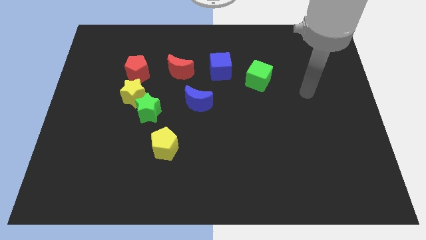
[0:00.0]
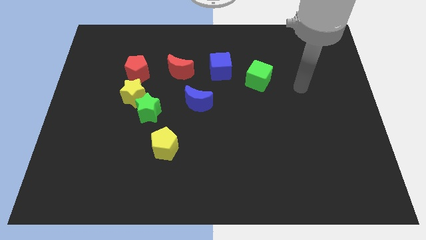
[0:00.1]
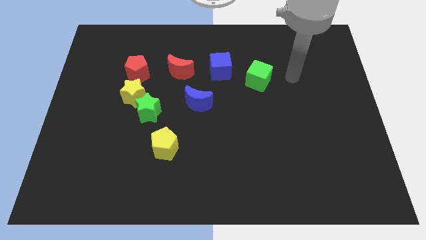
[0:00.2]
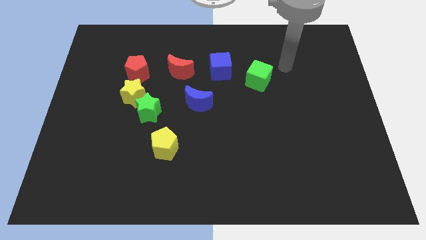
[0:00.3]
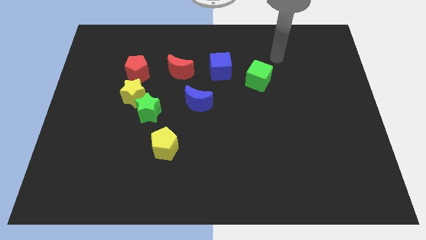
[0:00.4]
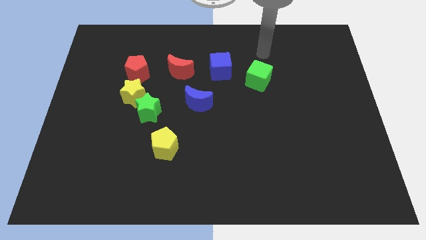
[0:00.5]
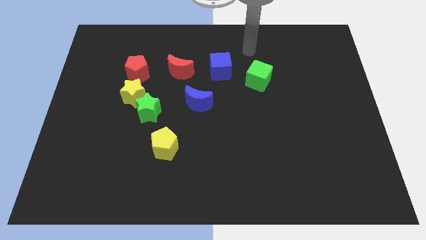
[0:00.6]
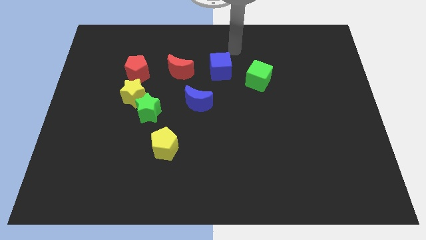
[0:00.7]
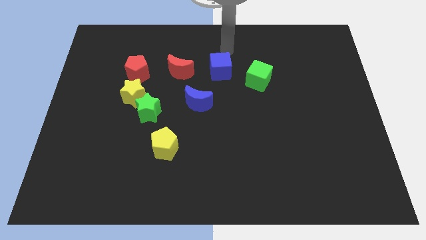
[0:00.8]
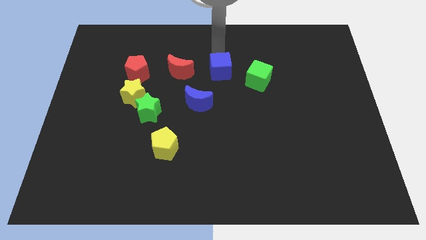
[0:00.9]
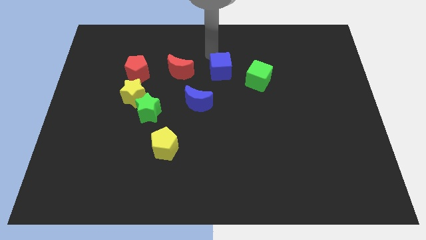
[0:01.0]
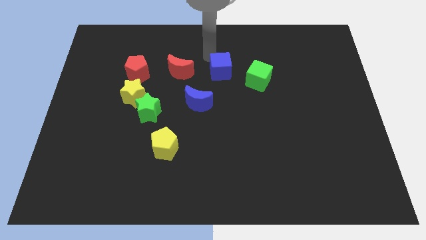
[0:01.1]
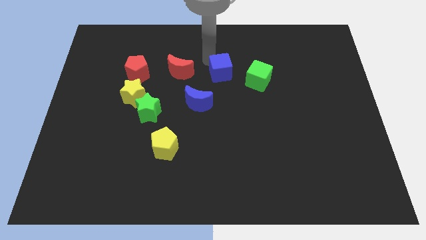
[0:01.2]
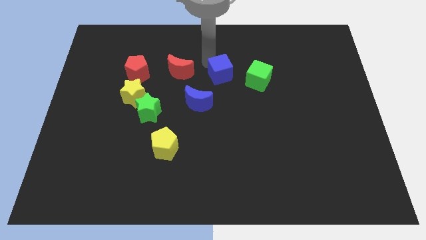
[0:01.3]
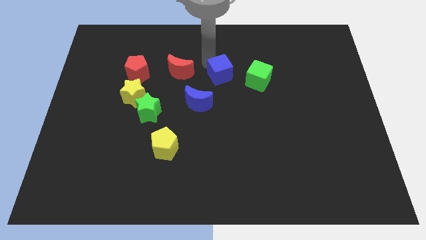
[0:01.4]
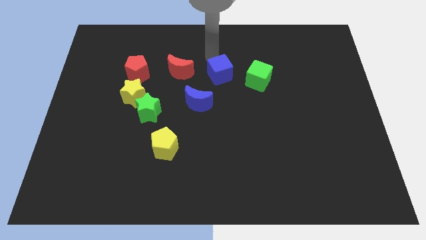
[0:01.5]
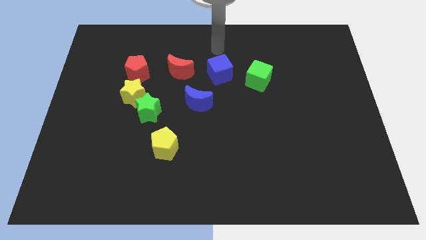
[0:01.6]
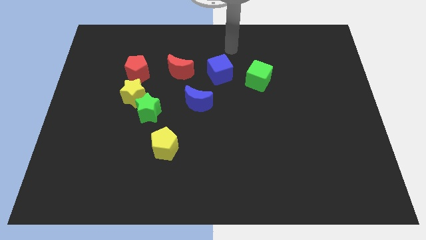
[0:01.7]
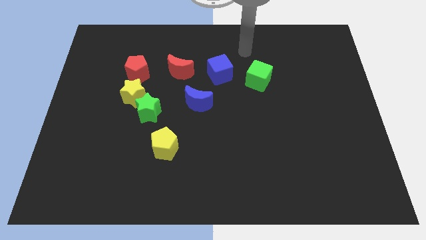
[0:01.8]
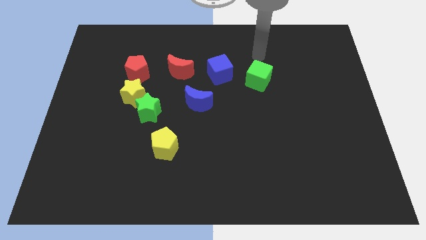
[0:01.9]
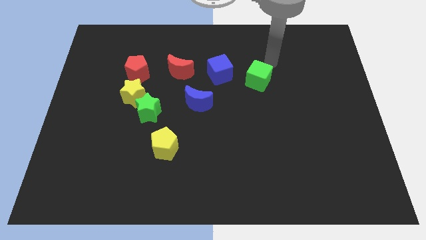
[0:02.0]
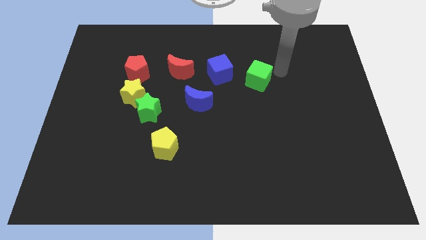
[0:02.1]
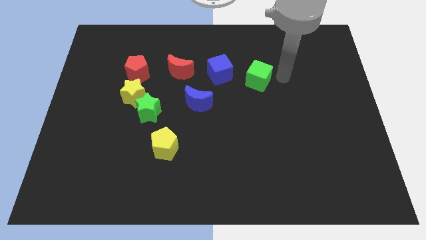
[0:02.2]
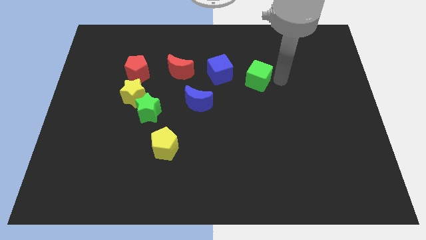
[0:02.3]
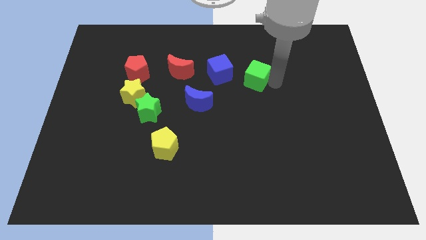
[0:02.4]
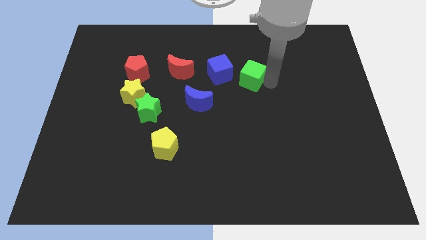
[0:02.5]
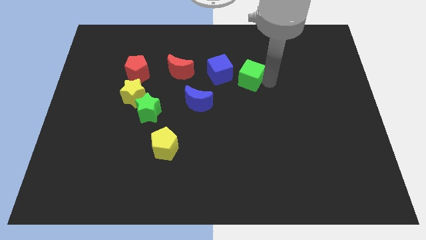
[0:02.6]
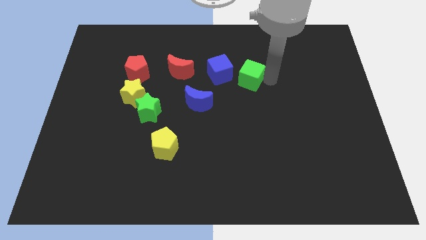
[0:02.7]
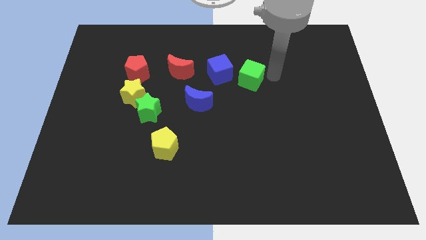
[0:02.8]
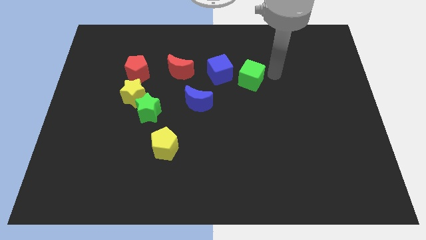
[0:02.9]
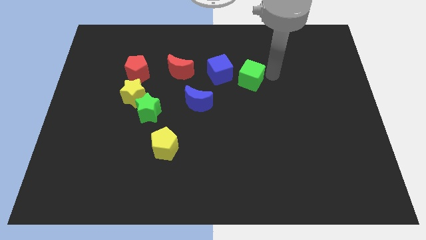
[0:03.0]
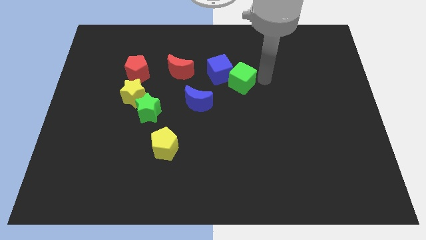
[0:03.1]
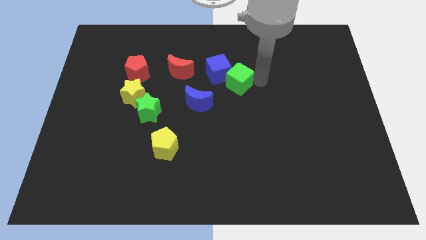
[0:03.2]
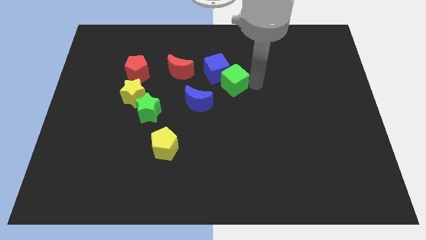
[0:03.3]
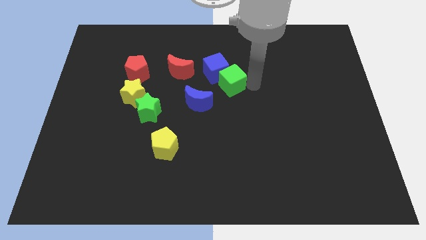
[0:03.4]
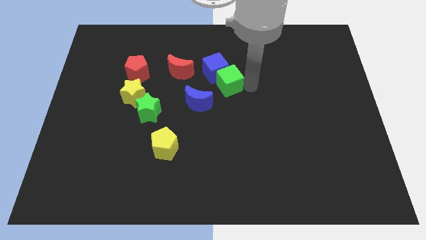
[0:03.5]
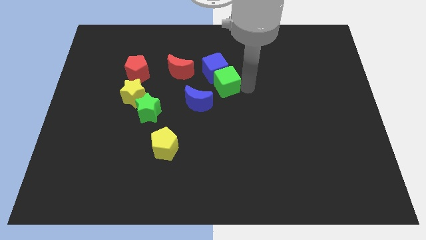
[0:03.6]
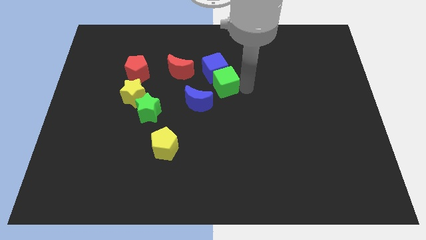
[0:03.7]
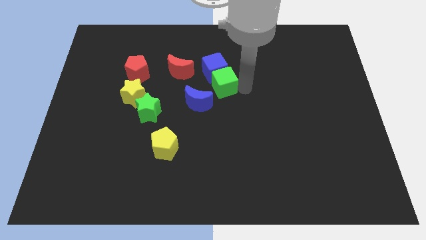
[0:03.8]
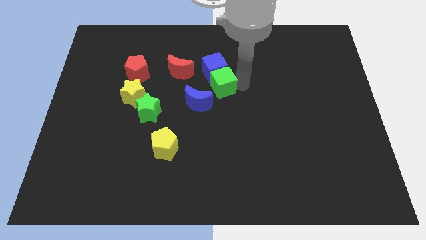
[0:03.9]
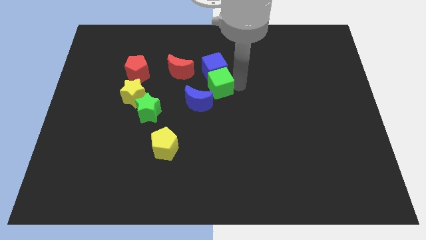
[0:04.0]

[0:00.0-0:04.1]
move green cube to the bottom right of the blue cube

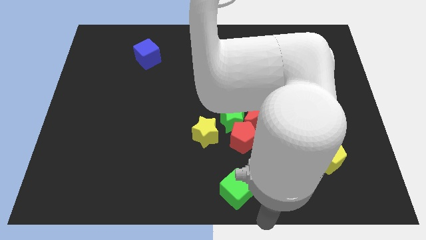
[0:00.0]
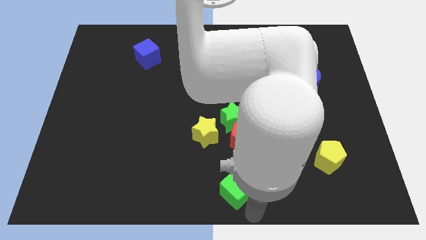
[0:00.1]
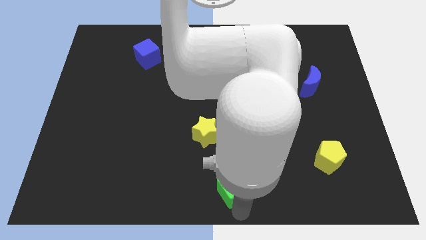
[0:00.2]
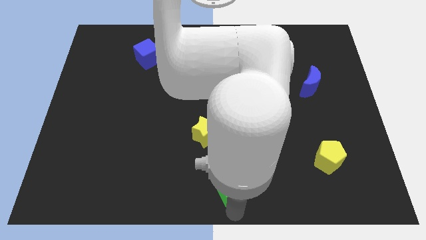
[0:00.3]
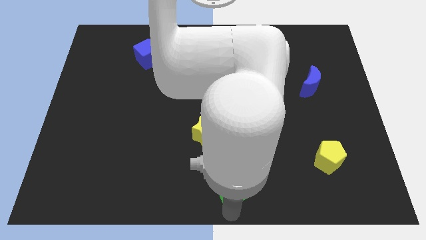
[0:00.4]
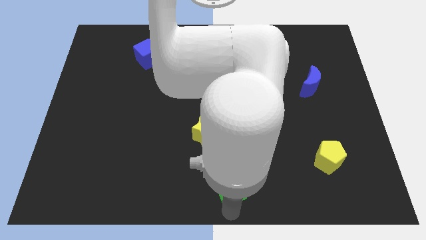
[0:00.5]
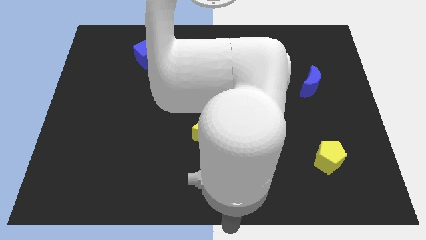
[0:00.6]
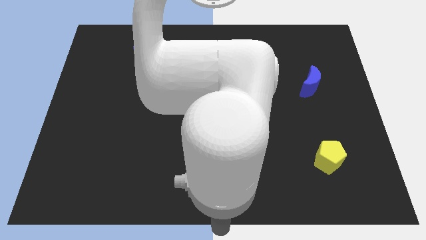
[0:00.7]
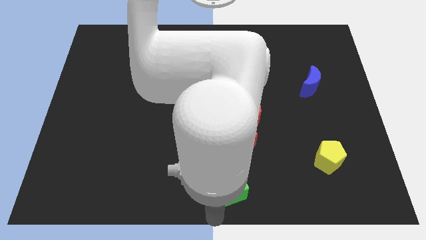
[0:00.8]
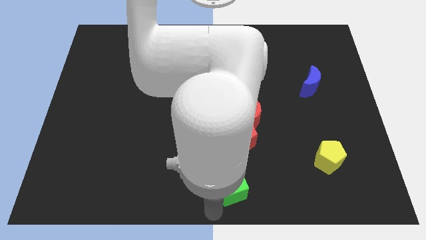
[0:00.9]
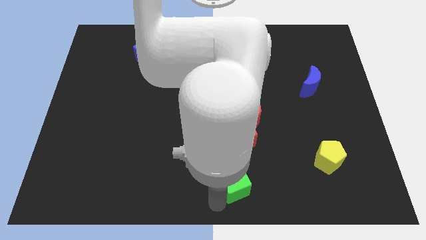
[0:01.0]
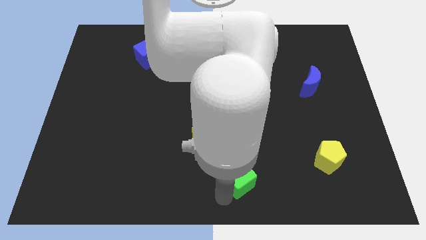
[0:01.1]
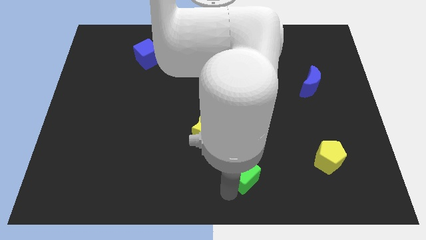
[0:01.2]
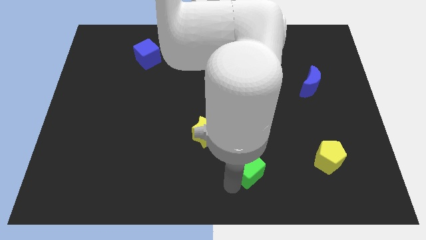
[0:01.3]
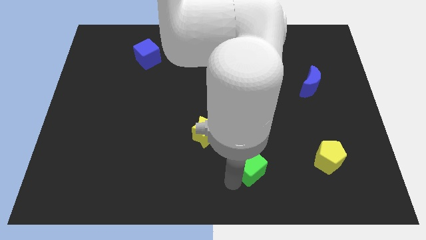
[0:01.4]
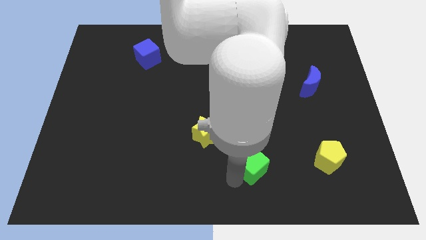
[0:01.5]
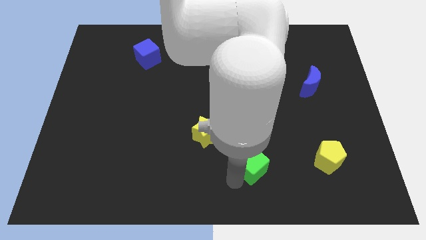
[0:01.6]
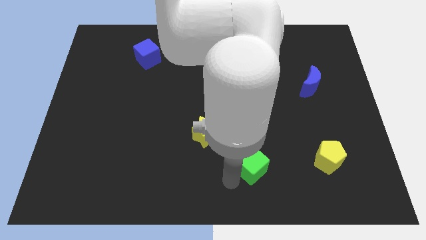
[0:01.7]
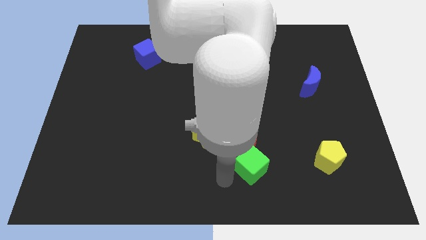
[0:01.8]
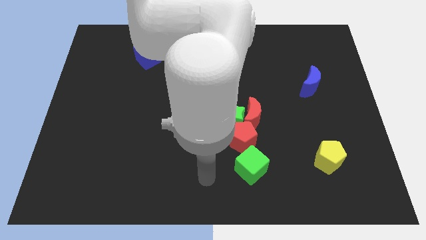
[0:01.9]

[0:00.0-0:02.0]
place the green cube to the bottom side of the red pentagon

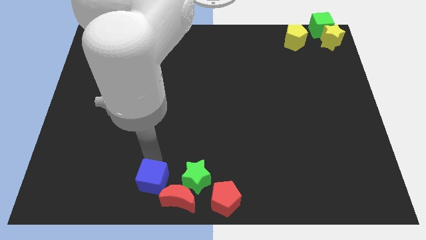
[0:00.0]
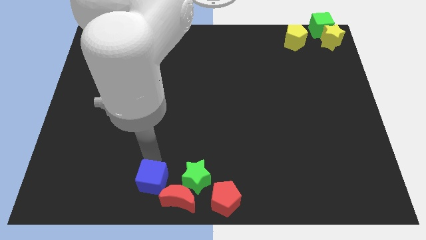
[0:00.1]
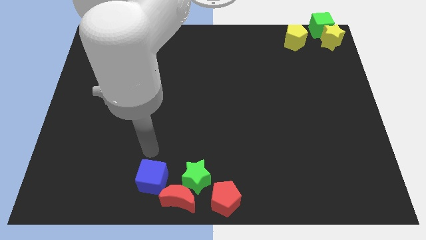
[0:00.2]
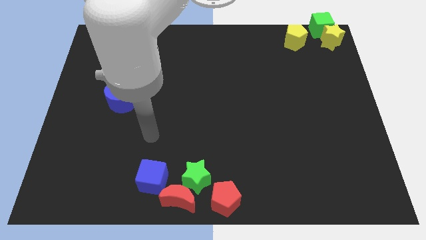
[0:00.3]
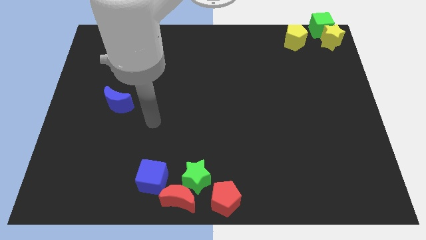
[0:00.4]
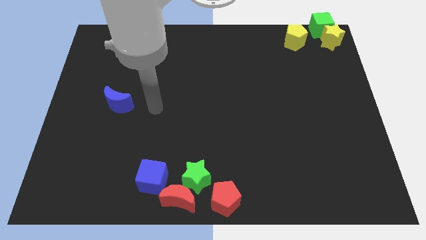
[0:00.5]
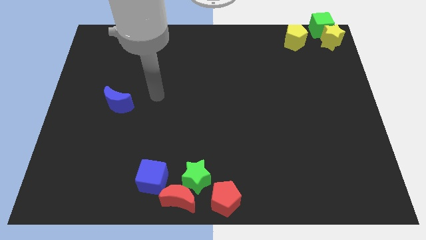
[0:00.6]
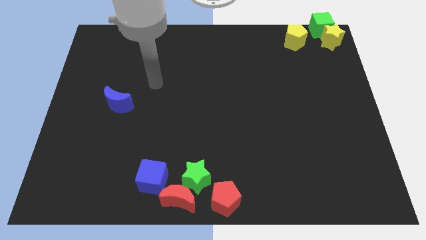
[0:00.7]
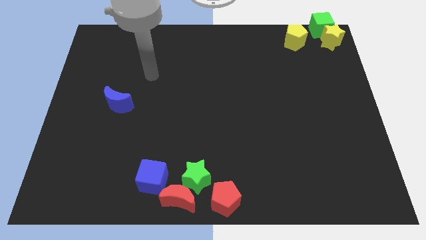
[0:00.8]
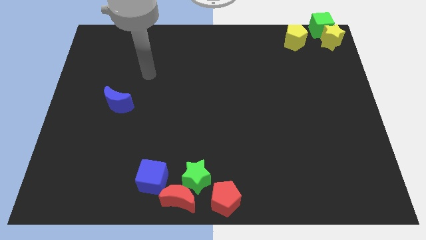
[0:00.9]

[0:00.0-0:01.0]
move blue block to the left of green star

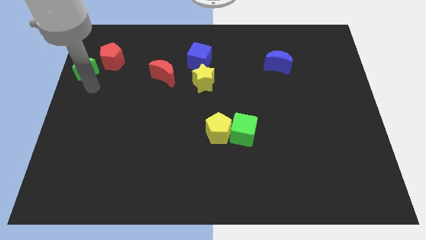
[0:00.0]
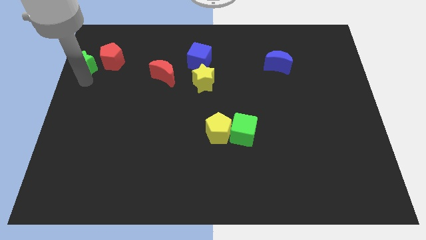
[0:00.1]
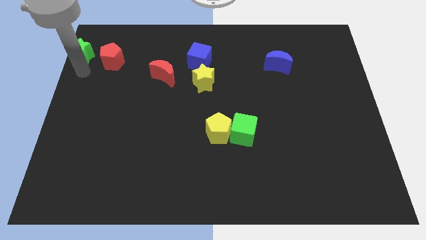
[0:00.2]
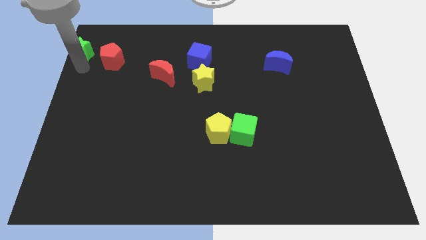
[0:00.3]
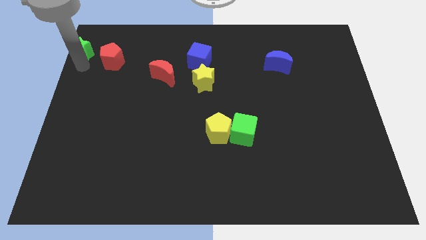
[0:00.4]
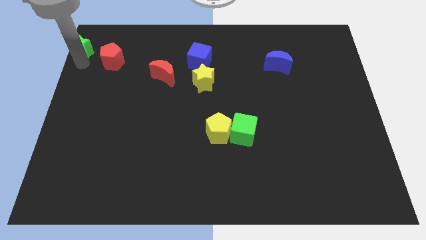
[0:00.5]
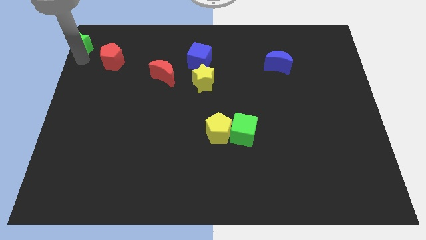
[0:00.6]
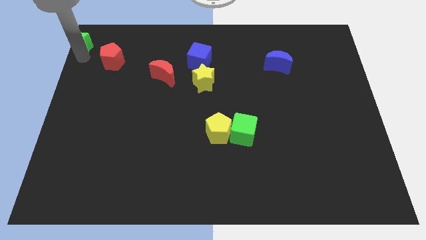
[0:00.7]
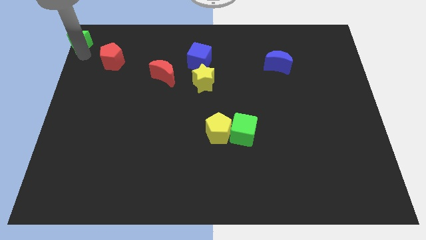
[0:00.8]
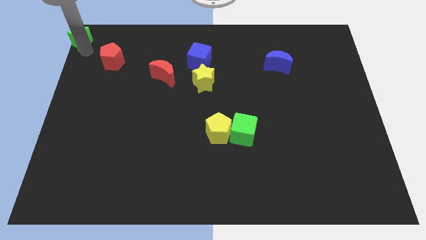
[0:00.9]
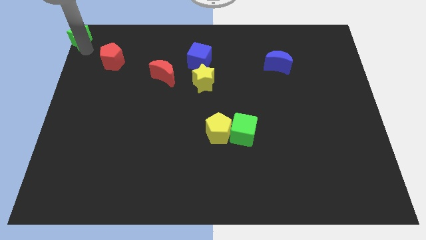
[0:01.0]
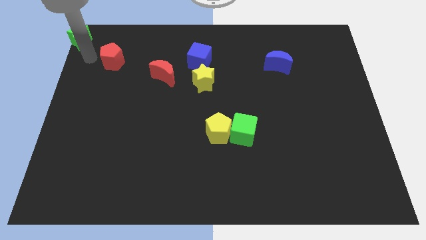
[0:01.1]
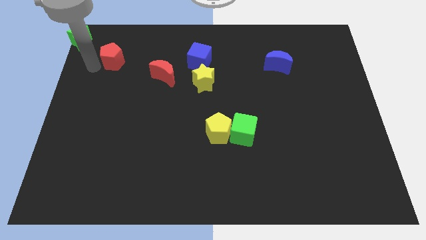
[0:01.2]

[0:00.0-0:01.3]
put the green star at the top left corner of the board

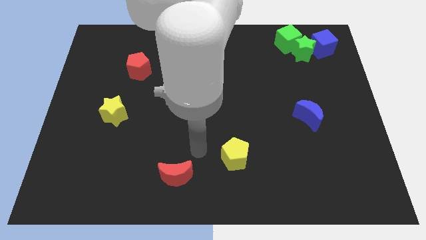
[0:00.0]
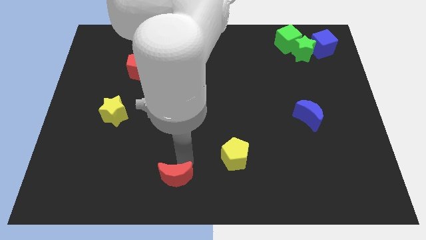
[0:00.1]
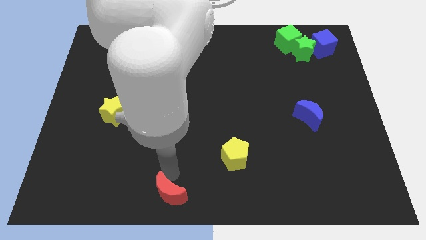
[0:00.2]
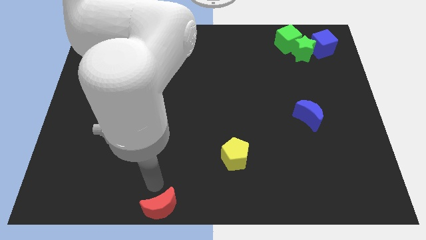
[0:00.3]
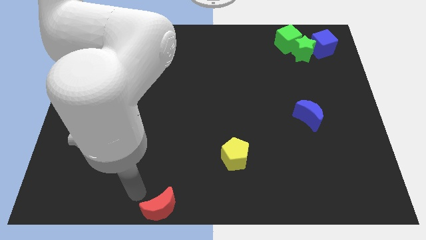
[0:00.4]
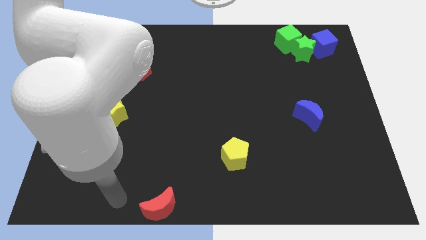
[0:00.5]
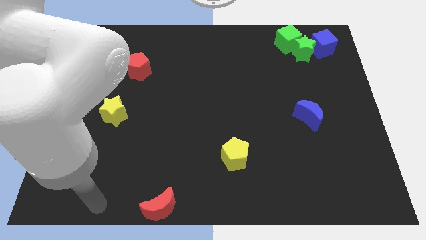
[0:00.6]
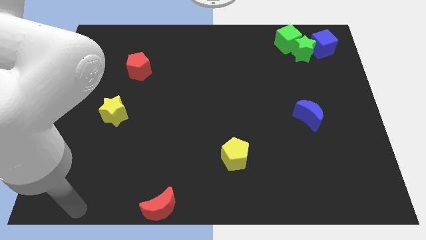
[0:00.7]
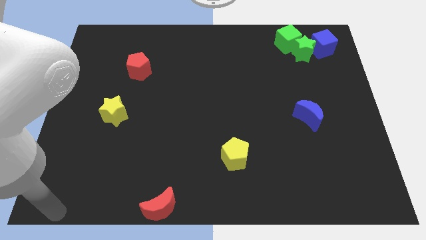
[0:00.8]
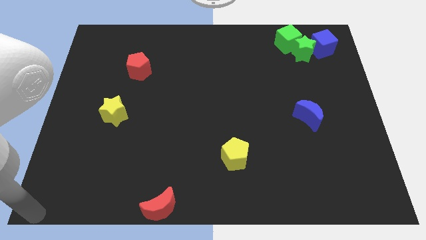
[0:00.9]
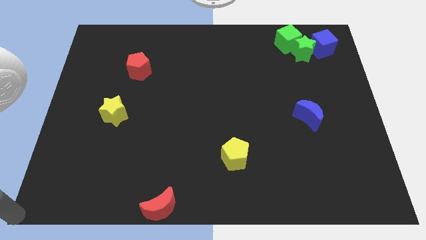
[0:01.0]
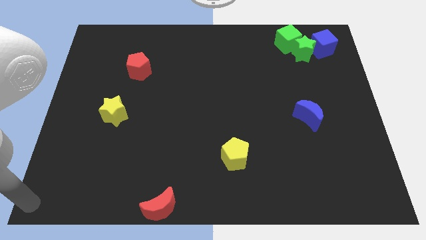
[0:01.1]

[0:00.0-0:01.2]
move the red crescent to the bottom
